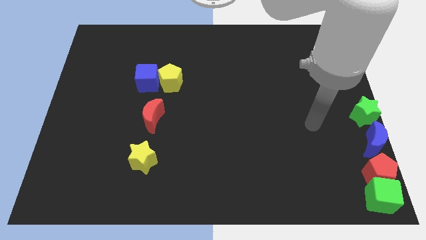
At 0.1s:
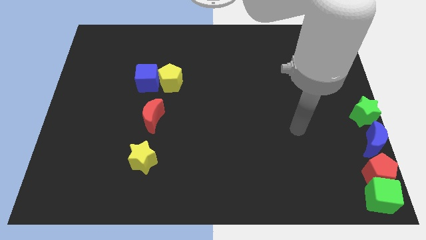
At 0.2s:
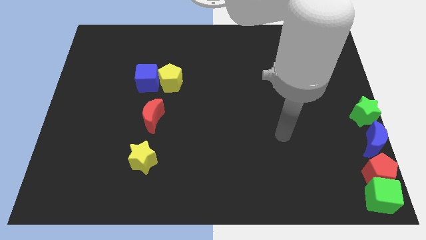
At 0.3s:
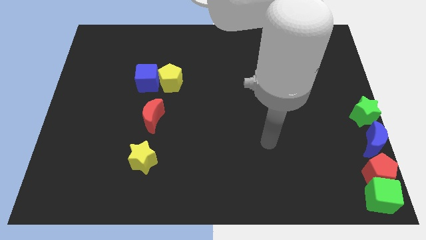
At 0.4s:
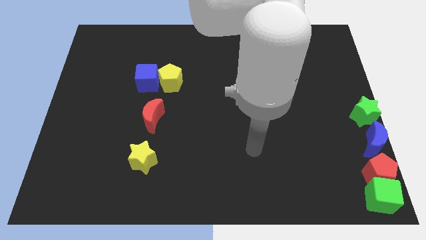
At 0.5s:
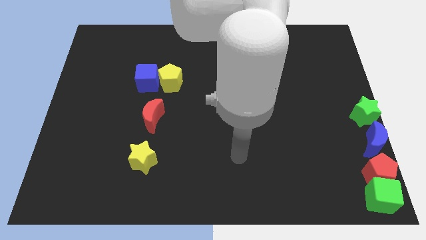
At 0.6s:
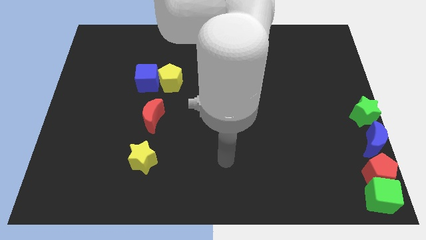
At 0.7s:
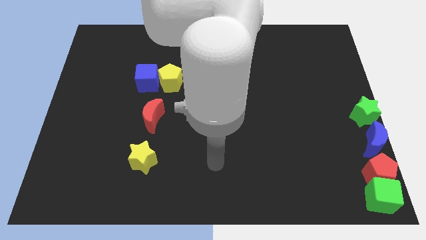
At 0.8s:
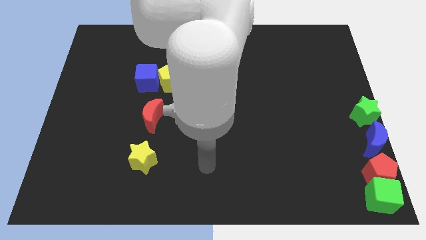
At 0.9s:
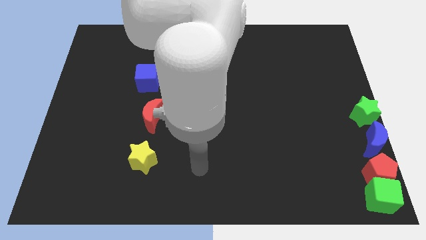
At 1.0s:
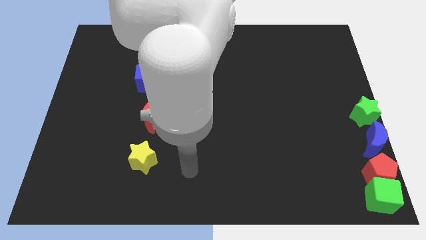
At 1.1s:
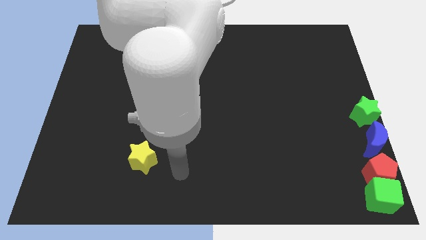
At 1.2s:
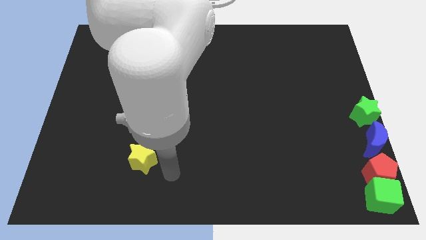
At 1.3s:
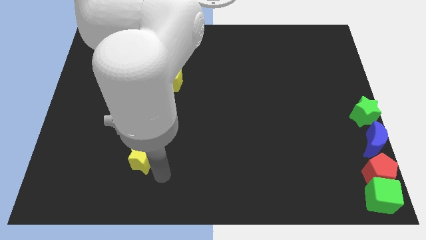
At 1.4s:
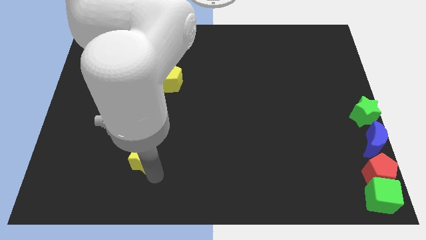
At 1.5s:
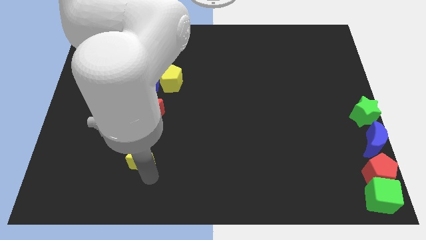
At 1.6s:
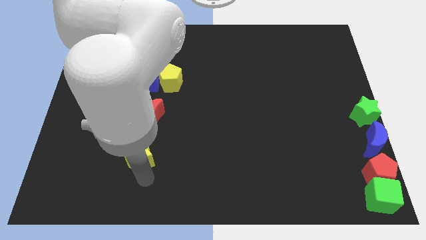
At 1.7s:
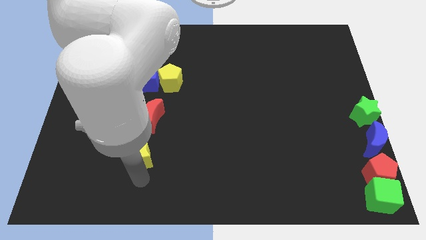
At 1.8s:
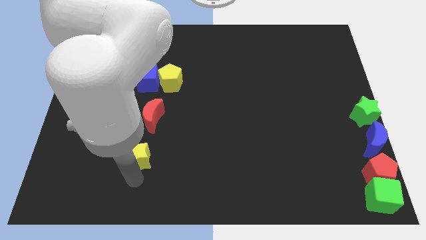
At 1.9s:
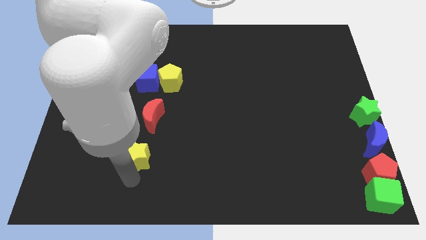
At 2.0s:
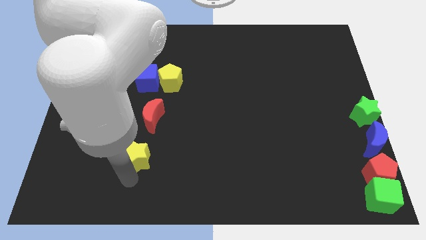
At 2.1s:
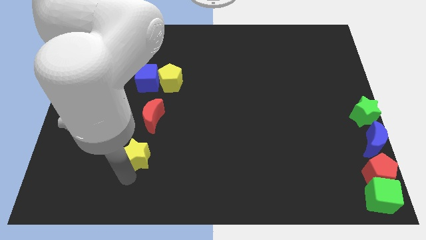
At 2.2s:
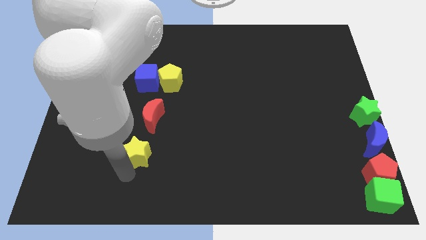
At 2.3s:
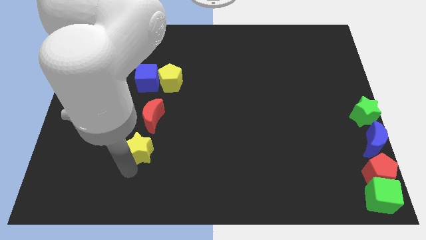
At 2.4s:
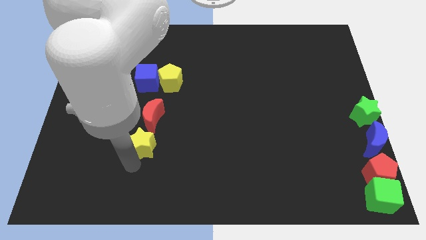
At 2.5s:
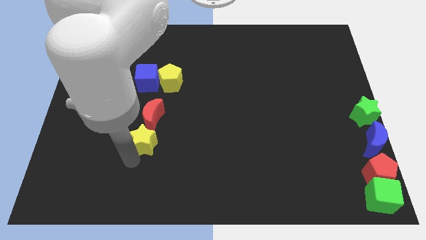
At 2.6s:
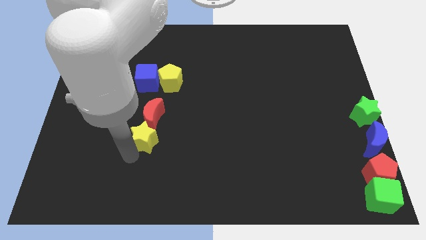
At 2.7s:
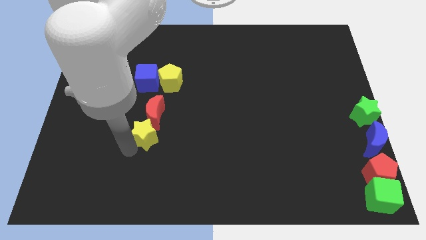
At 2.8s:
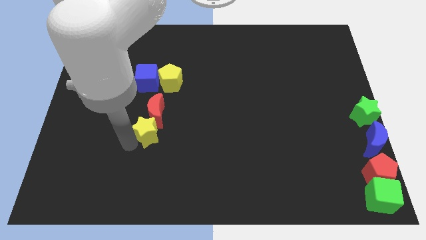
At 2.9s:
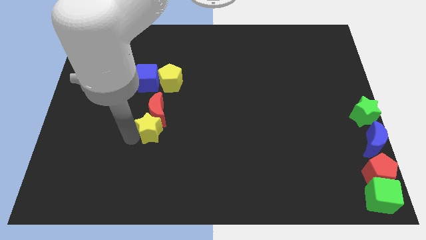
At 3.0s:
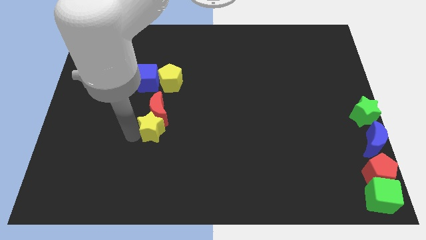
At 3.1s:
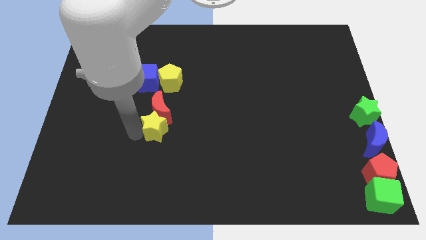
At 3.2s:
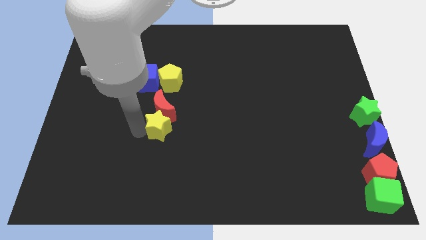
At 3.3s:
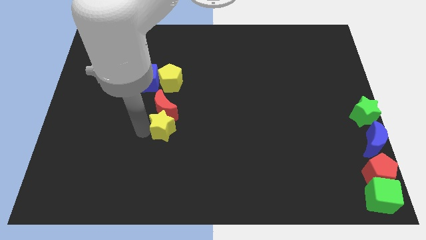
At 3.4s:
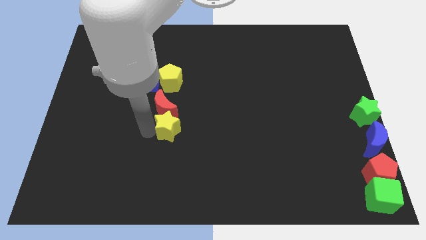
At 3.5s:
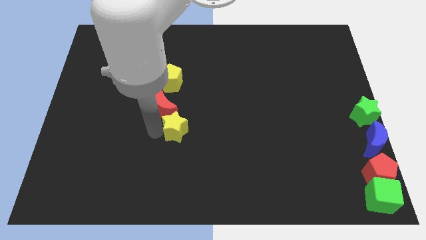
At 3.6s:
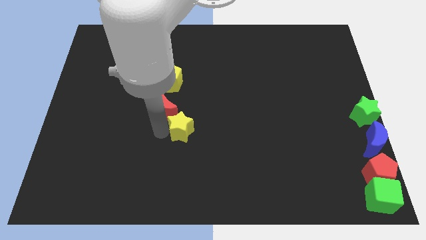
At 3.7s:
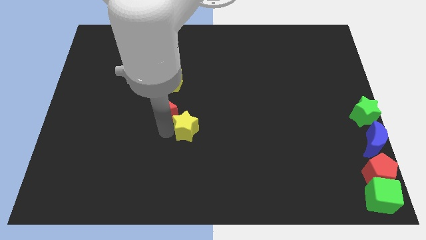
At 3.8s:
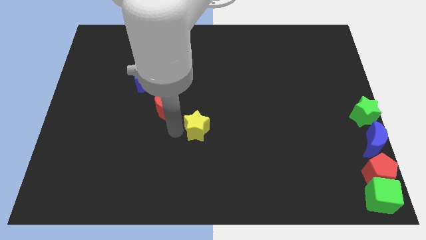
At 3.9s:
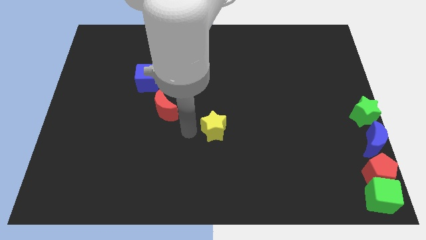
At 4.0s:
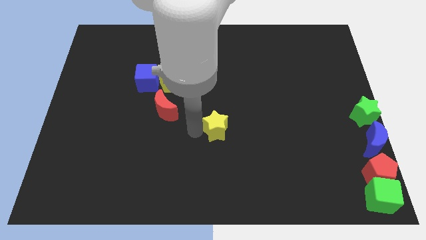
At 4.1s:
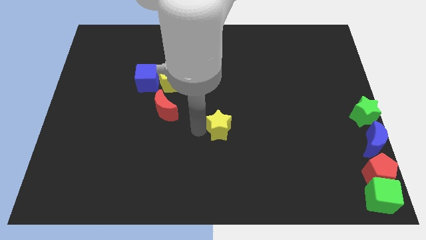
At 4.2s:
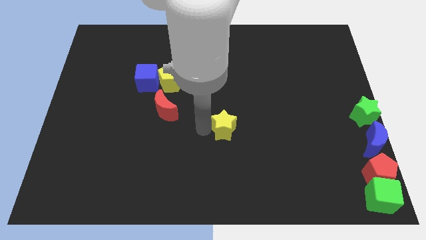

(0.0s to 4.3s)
move yellow star to the centre of the board

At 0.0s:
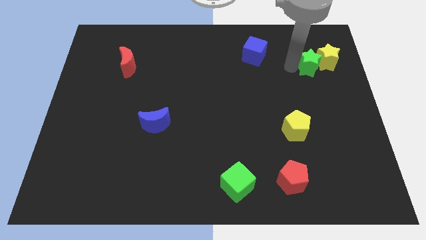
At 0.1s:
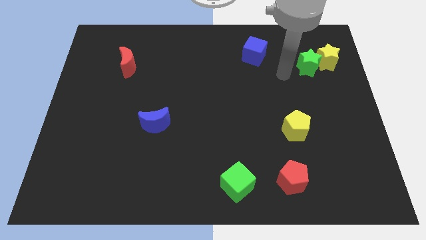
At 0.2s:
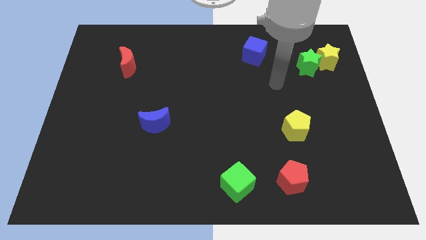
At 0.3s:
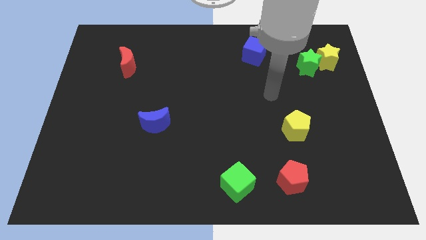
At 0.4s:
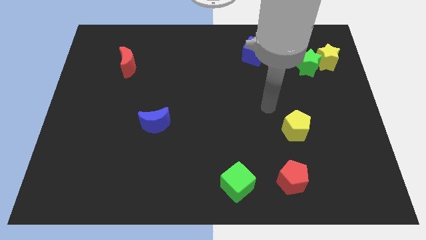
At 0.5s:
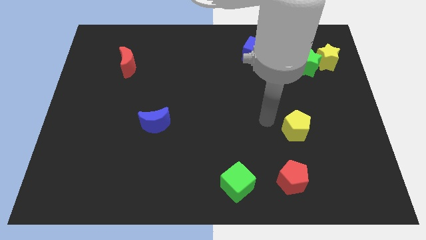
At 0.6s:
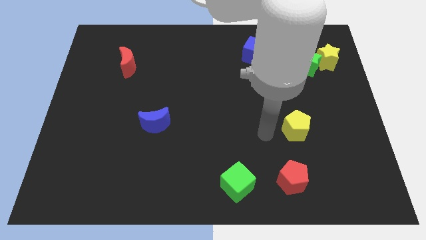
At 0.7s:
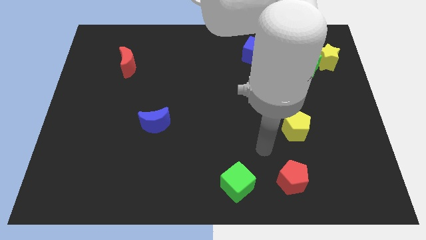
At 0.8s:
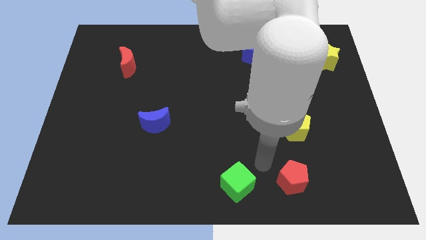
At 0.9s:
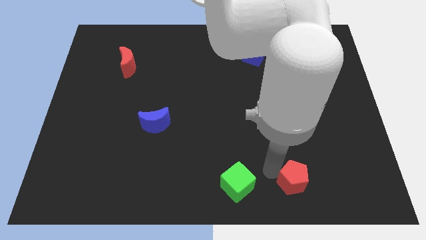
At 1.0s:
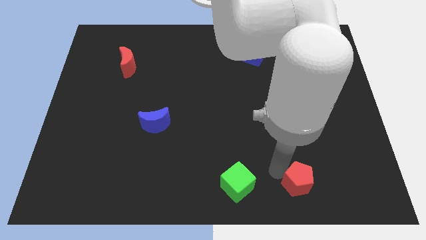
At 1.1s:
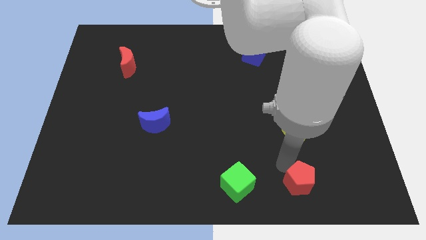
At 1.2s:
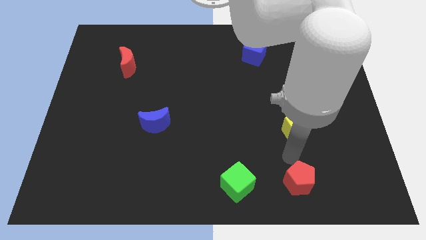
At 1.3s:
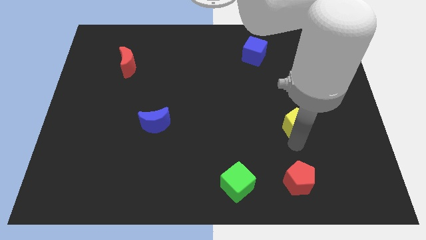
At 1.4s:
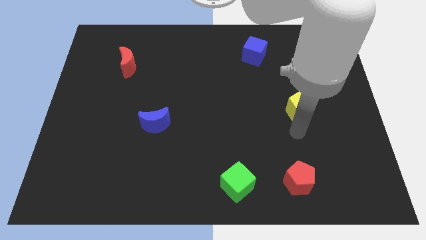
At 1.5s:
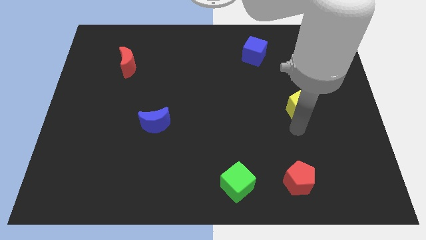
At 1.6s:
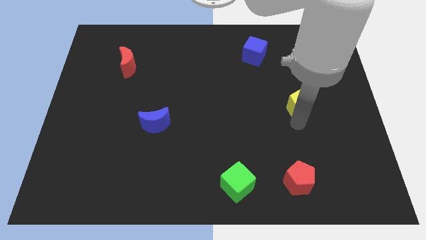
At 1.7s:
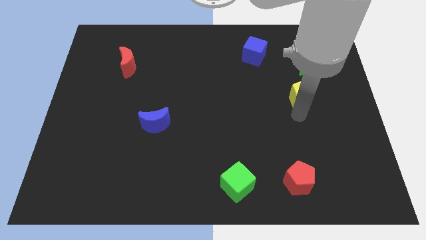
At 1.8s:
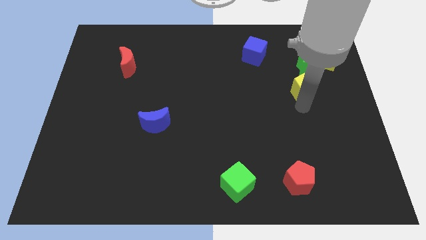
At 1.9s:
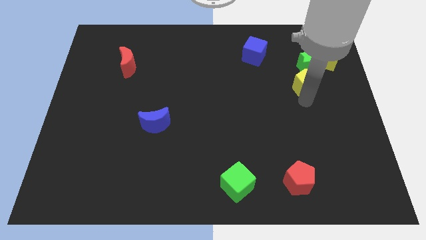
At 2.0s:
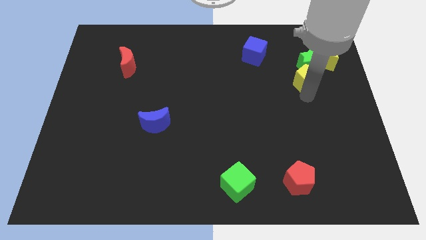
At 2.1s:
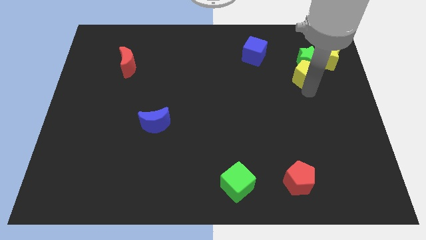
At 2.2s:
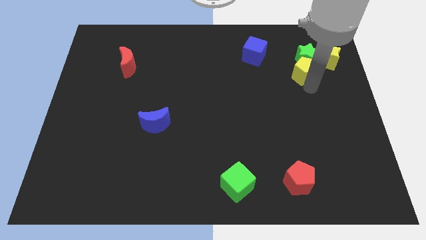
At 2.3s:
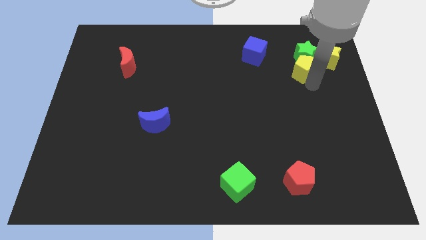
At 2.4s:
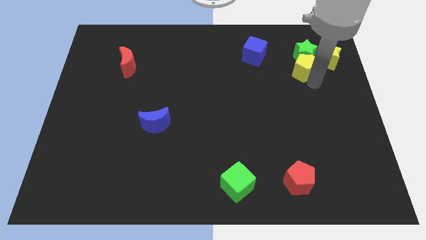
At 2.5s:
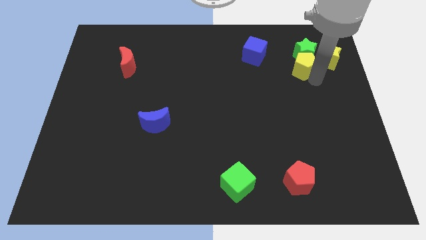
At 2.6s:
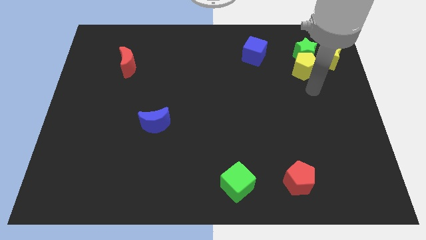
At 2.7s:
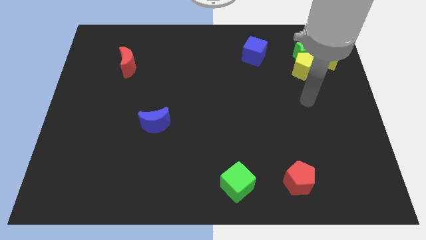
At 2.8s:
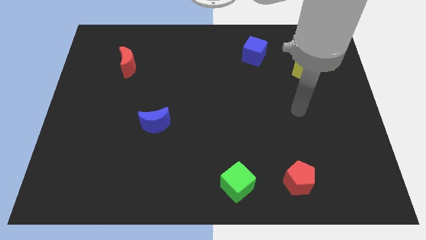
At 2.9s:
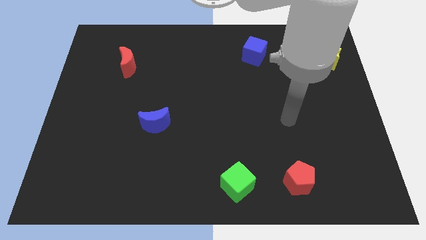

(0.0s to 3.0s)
push the red and yellow pentagons in different directions

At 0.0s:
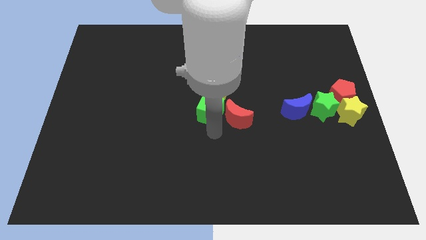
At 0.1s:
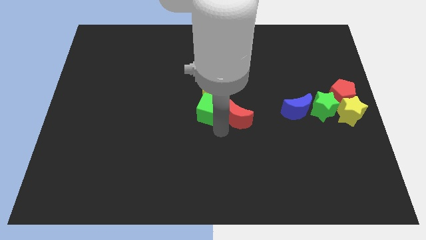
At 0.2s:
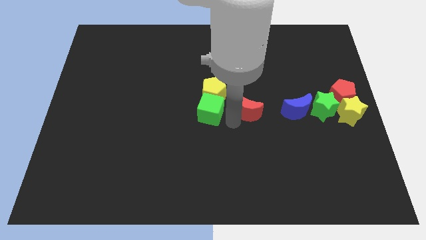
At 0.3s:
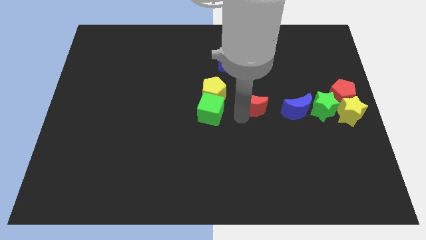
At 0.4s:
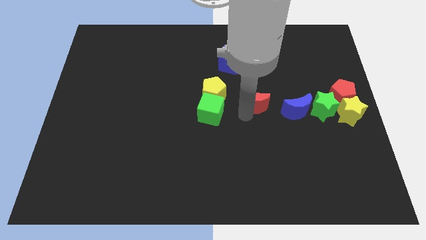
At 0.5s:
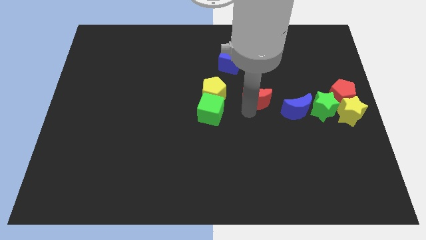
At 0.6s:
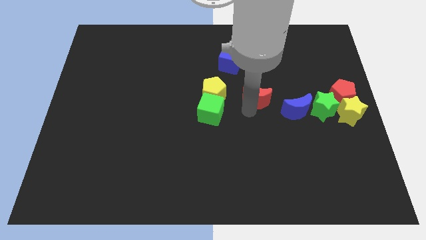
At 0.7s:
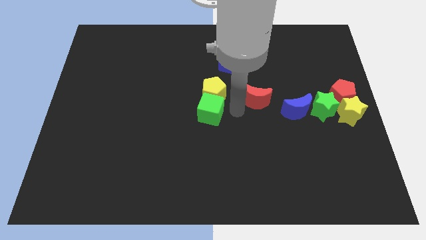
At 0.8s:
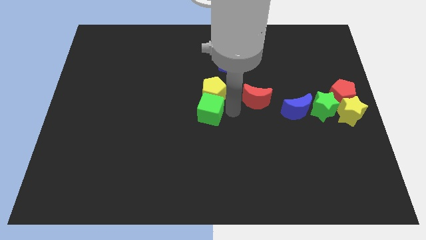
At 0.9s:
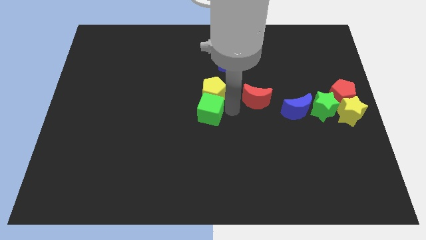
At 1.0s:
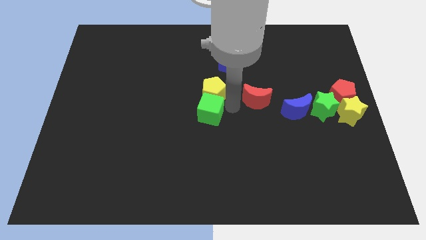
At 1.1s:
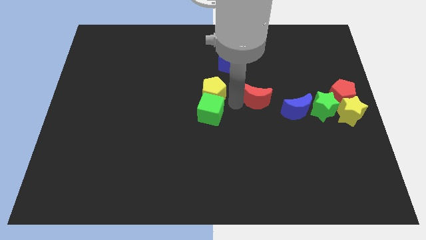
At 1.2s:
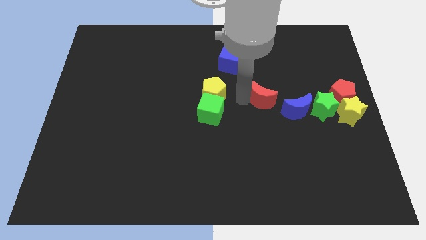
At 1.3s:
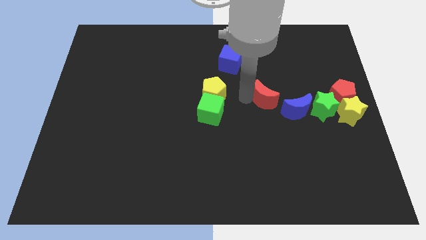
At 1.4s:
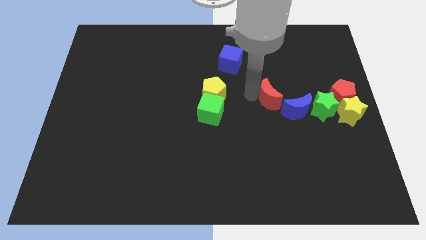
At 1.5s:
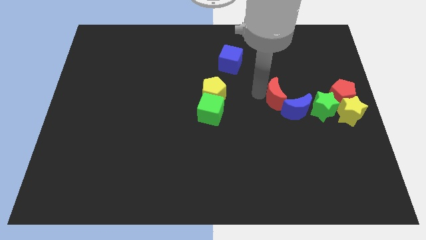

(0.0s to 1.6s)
separate the red crescent from the green cube
